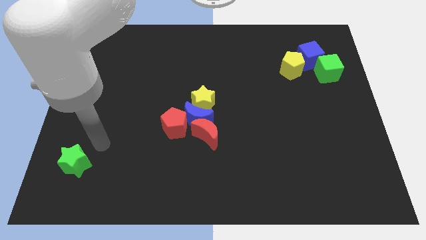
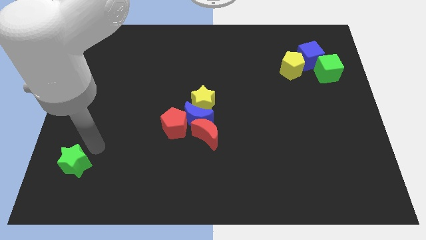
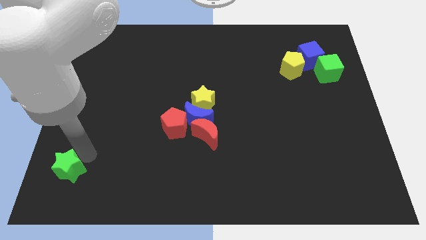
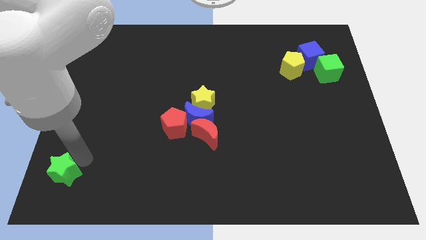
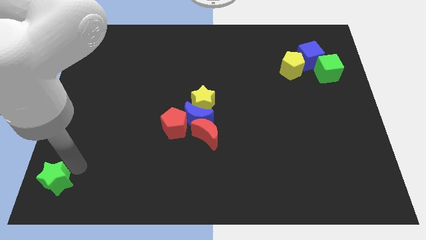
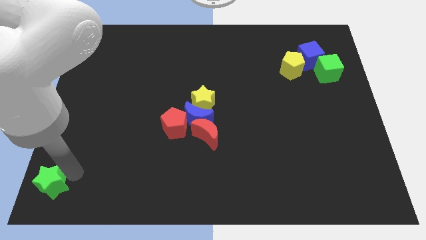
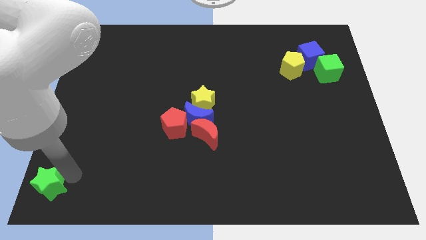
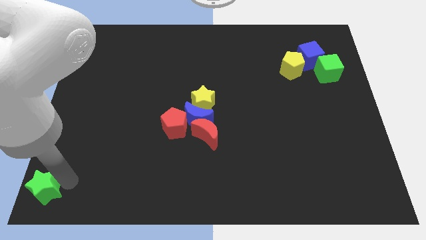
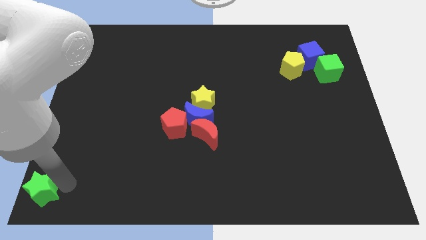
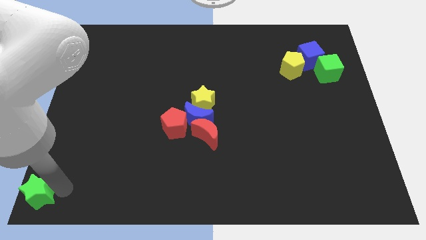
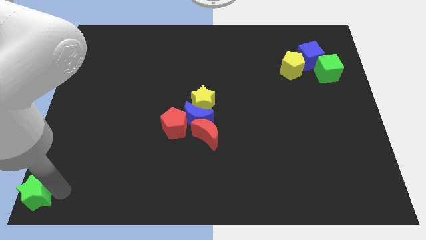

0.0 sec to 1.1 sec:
place the green star at the bottom left corner of the board

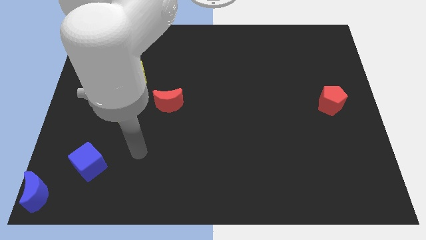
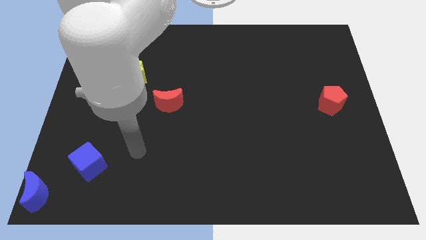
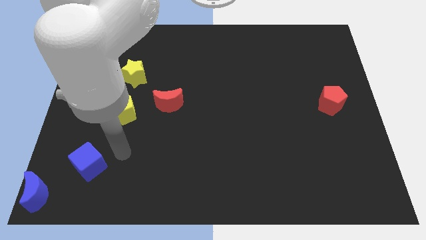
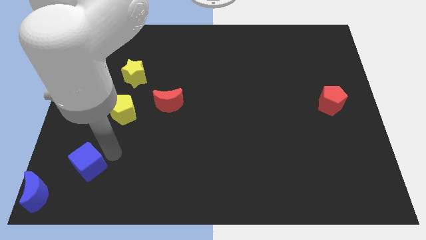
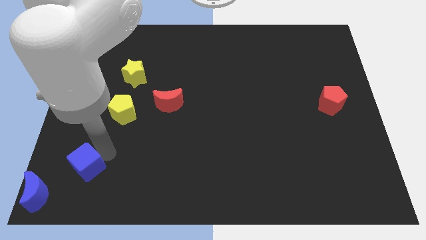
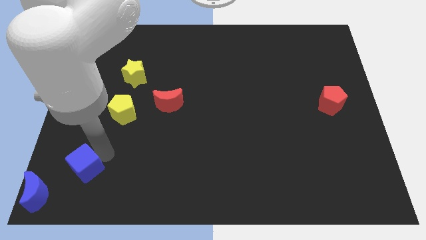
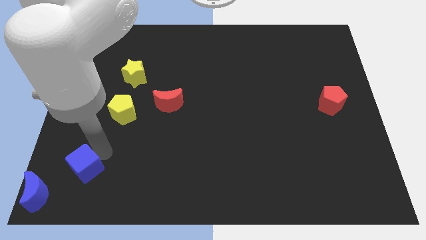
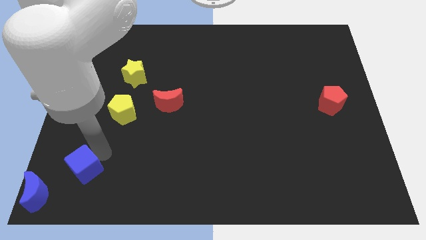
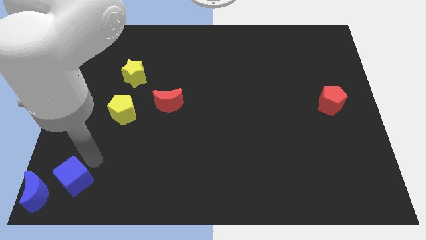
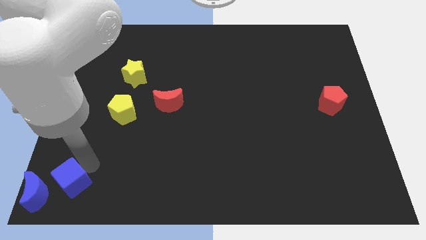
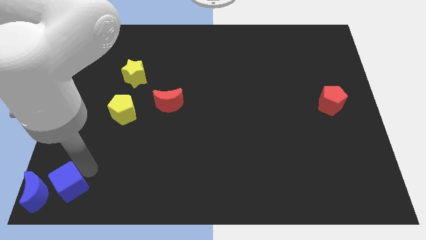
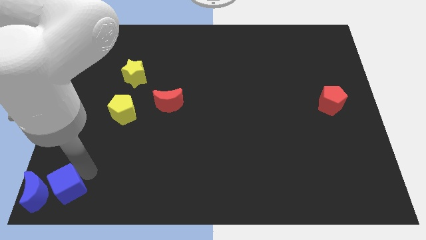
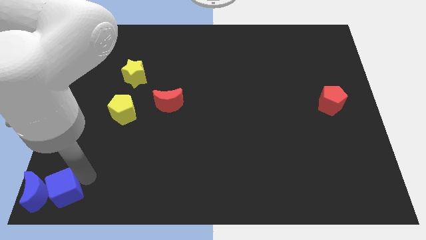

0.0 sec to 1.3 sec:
move the blue cube towards the blue crescent

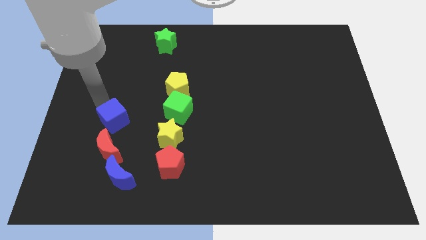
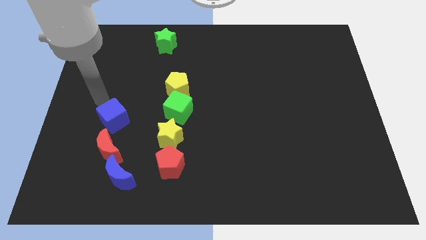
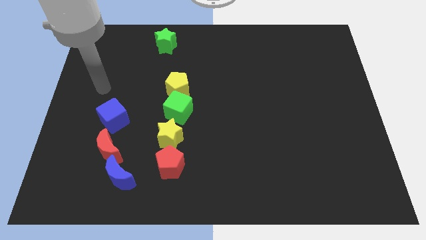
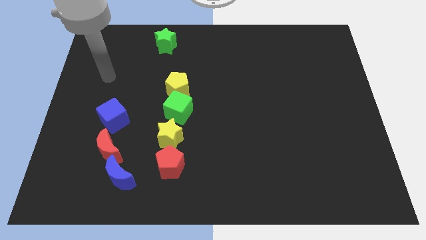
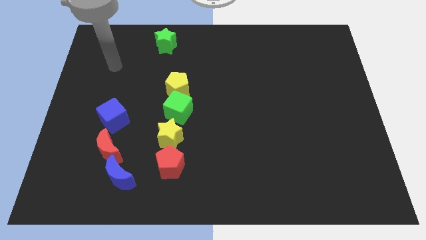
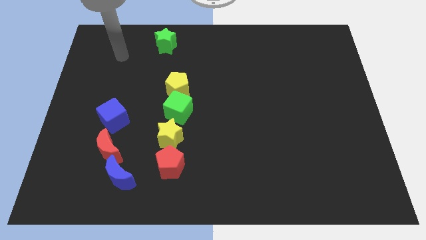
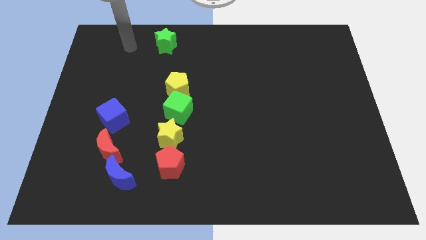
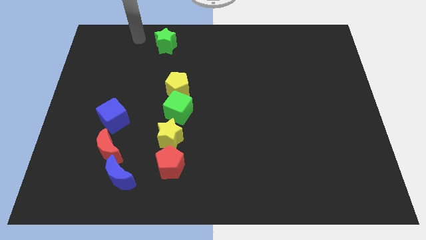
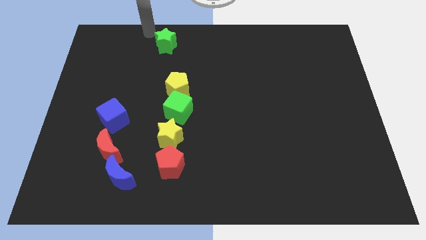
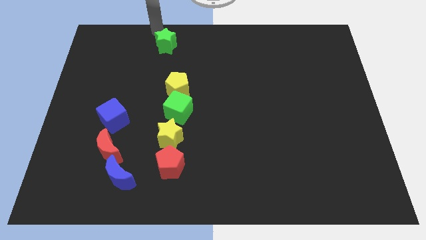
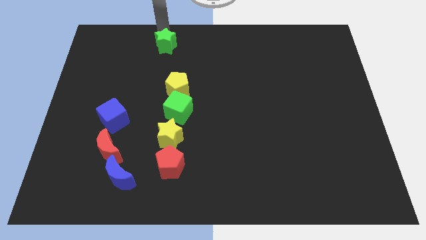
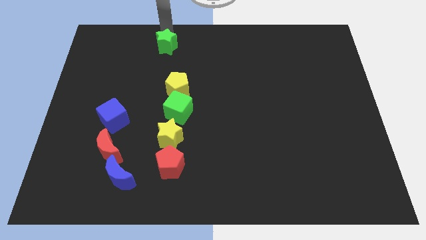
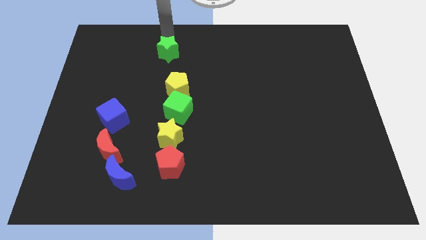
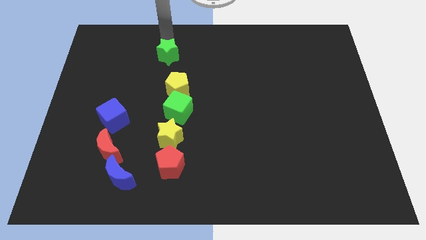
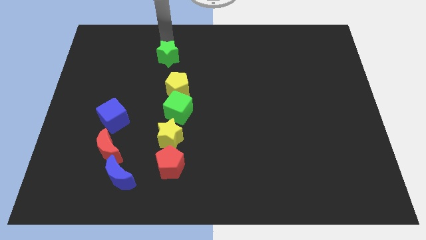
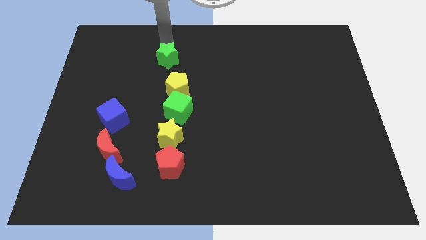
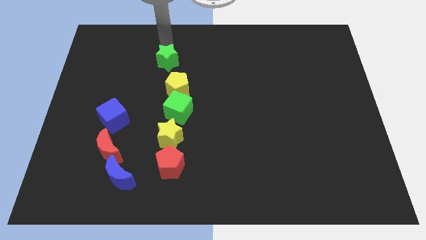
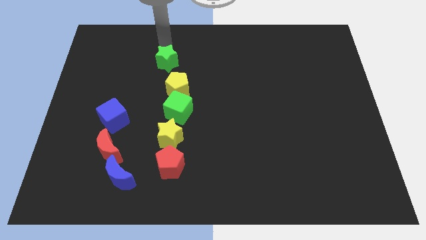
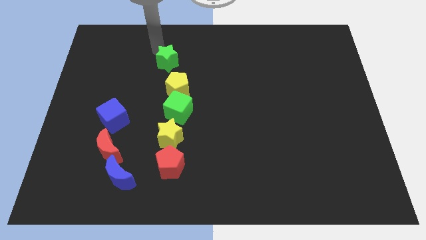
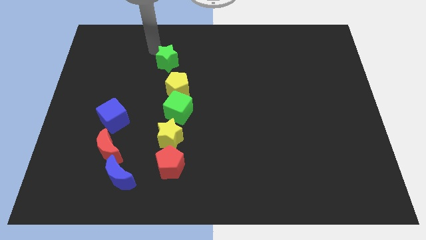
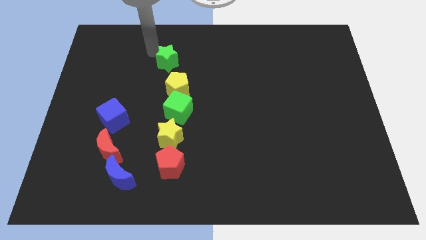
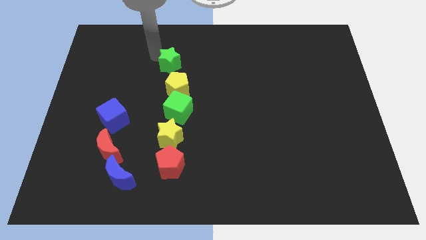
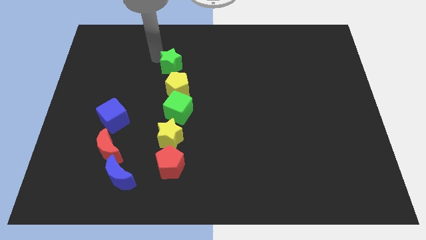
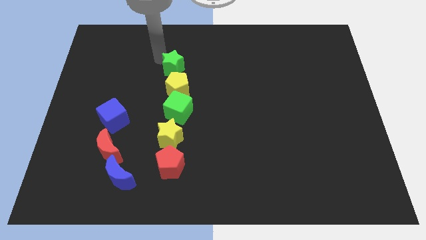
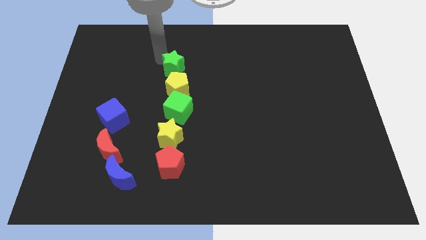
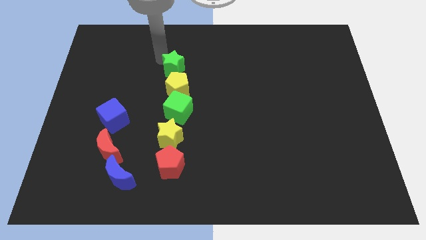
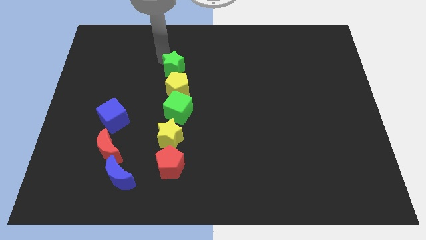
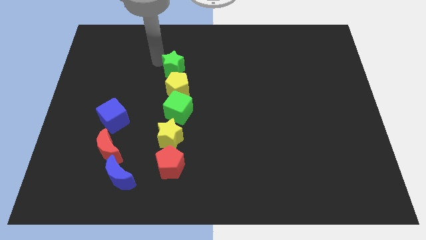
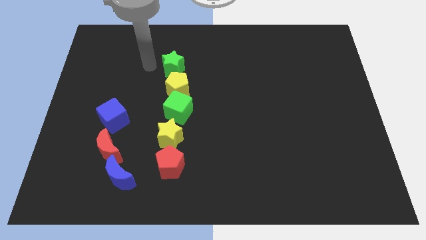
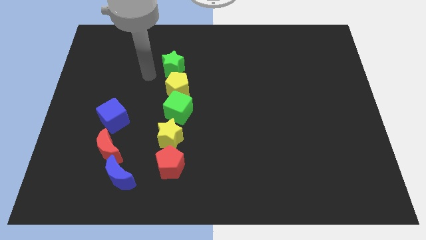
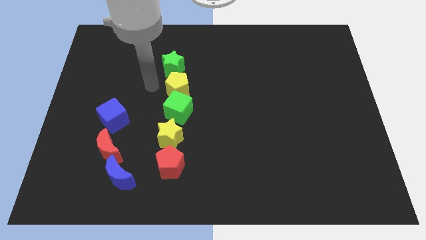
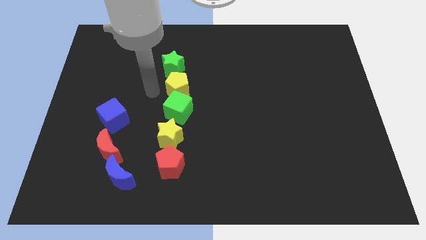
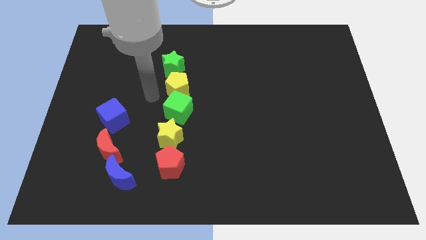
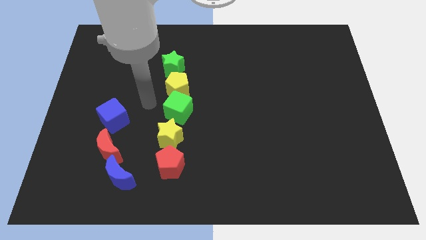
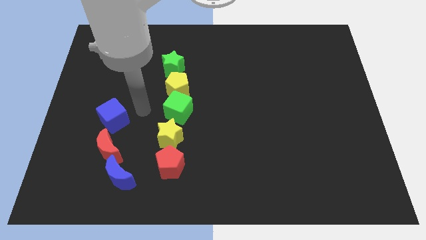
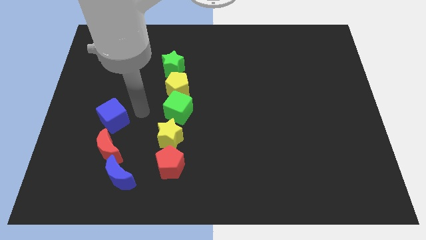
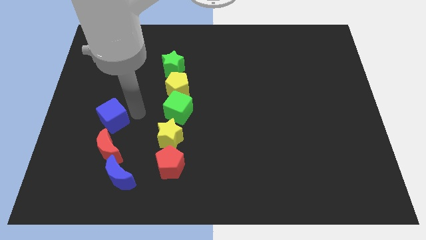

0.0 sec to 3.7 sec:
push the green star above the yellow pentagon

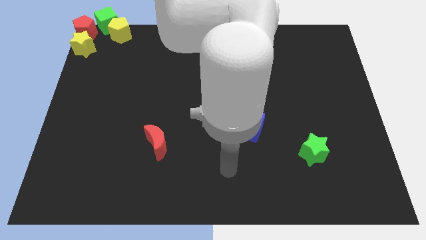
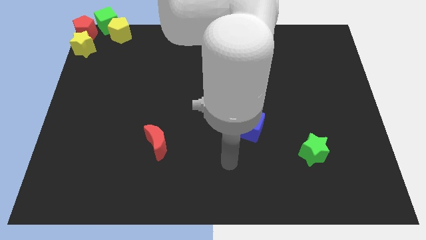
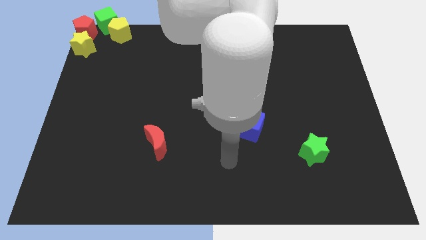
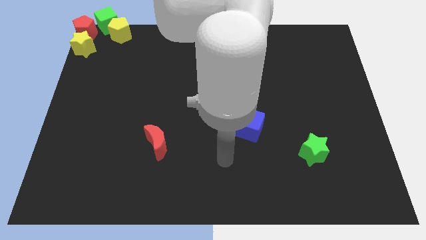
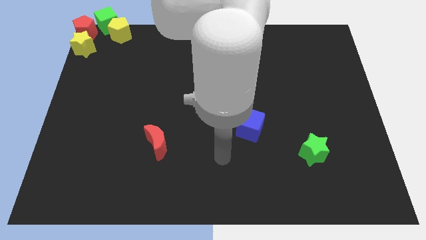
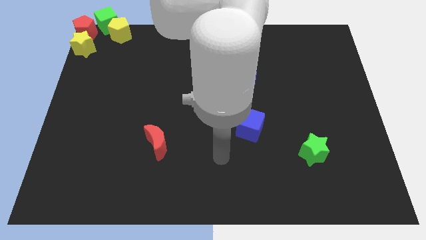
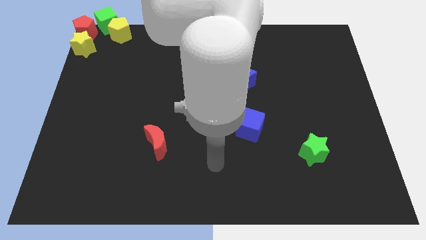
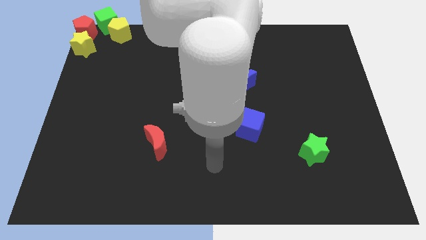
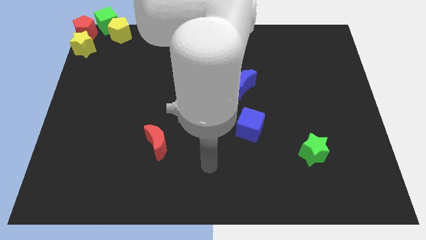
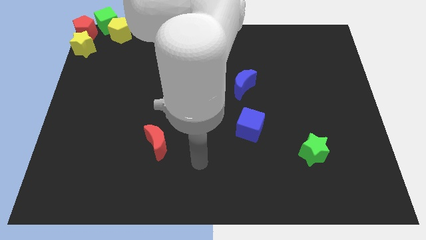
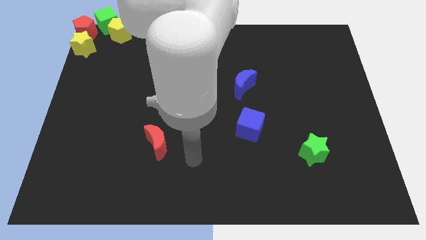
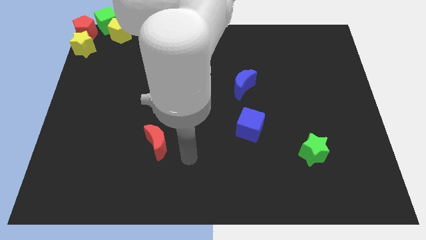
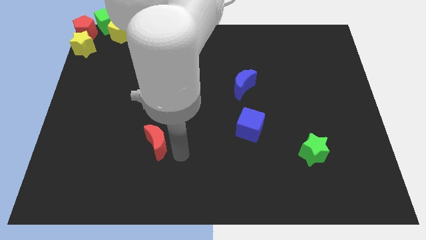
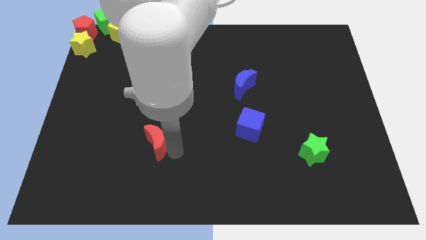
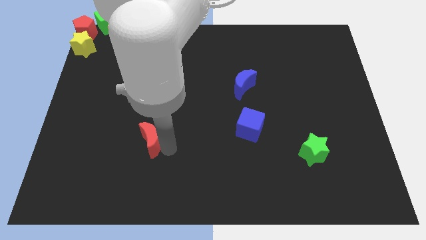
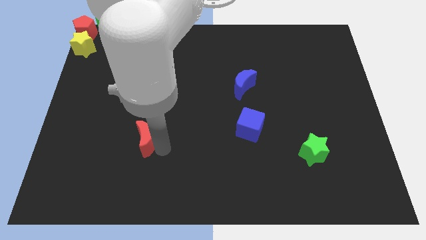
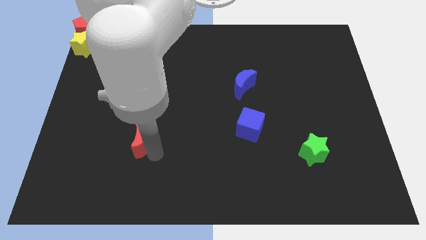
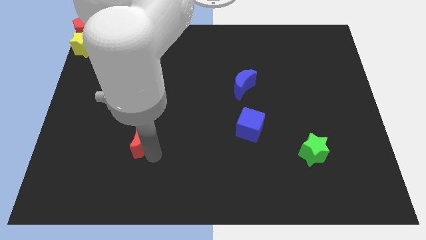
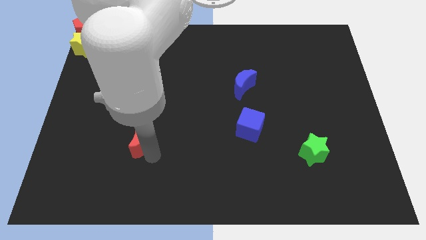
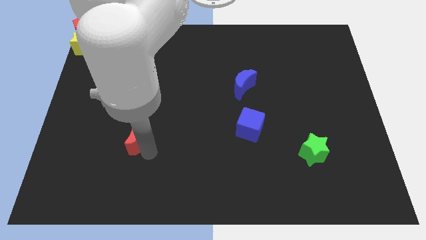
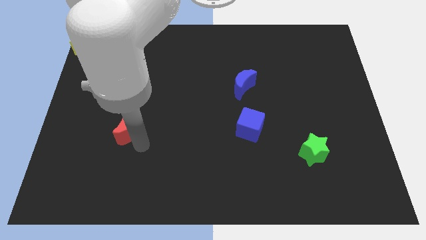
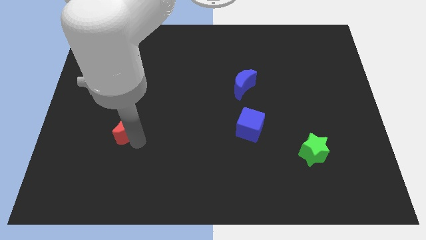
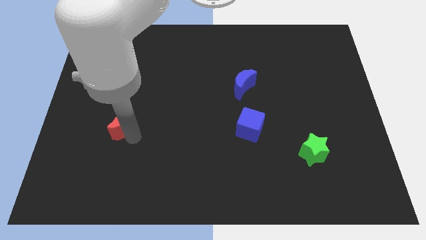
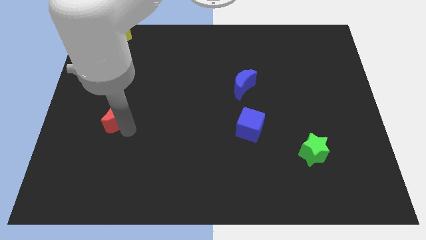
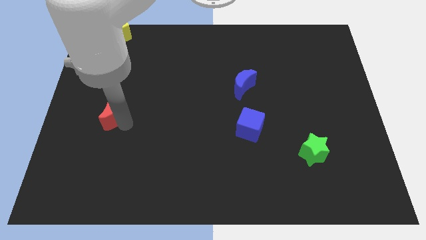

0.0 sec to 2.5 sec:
push red moon towards left center of the board

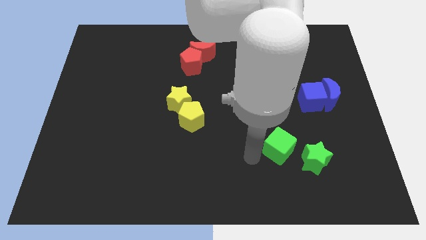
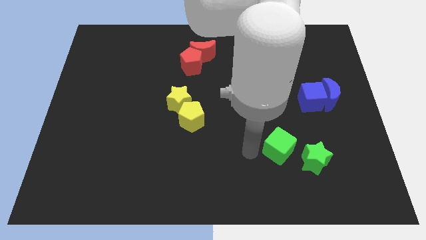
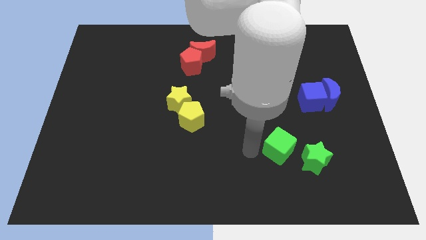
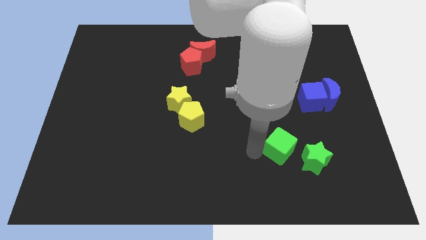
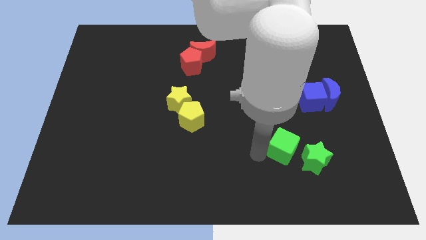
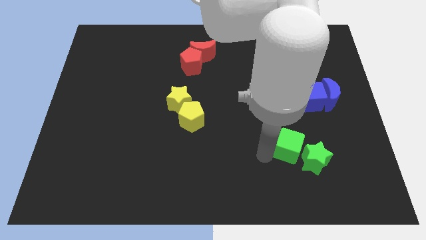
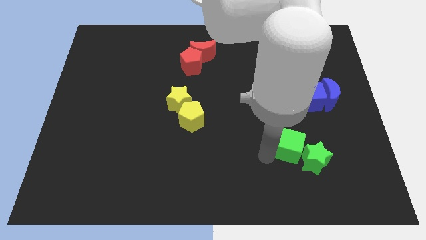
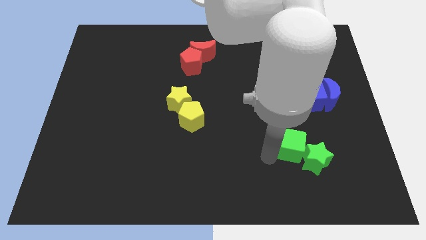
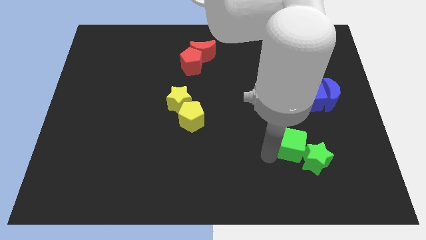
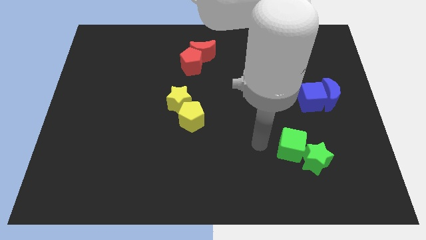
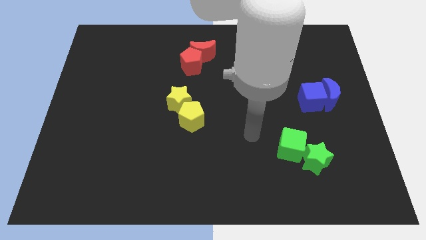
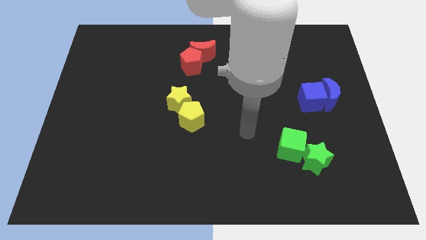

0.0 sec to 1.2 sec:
move the green cube slightly to the right
